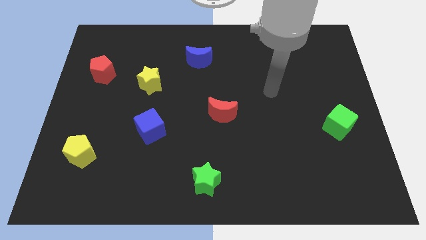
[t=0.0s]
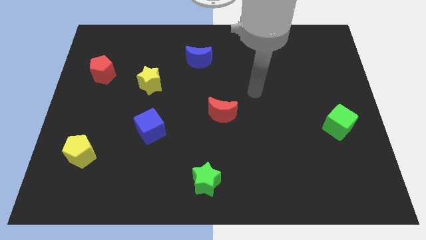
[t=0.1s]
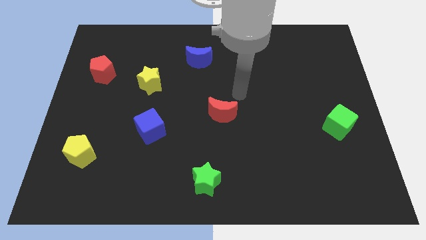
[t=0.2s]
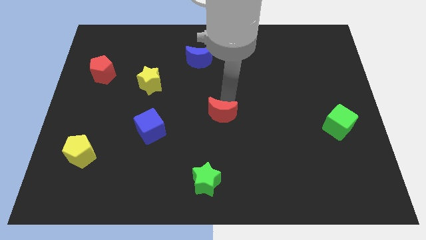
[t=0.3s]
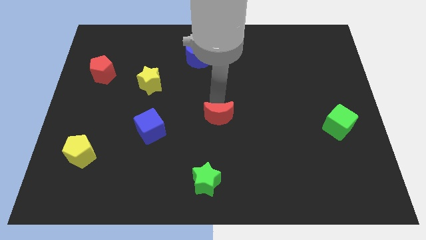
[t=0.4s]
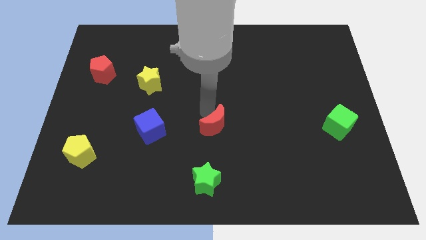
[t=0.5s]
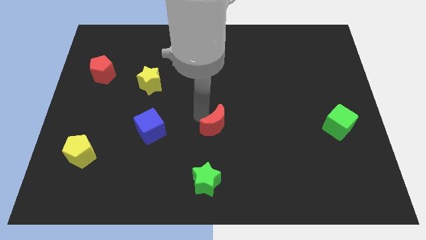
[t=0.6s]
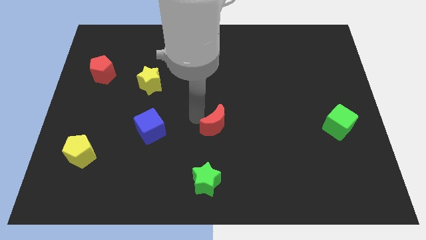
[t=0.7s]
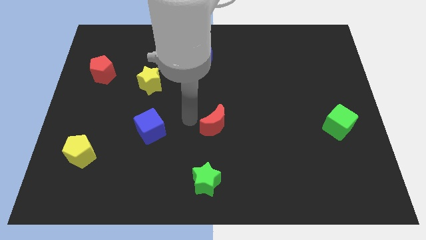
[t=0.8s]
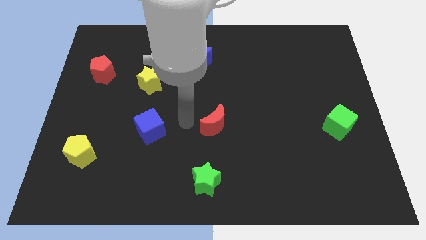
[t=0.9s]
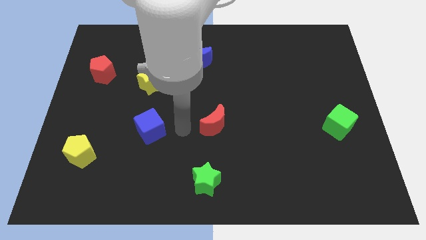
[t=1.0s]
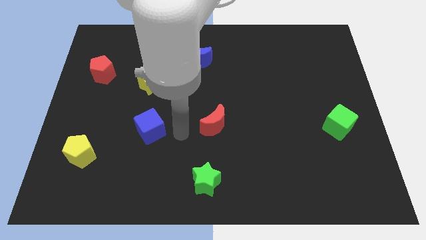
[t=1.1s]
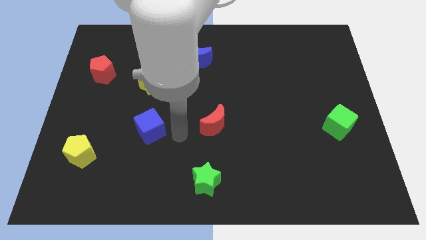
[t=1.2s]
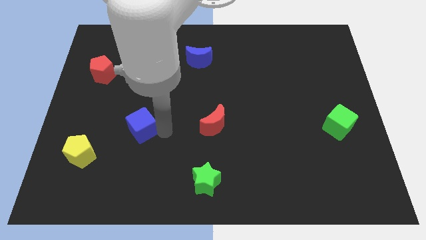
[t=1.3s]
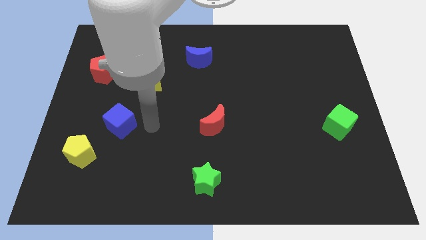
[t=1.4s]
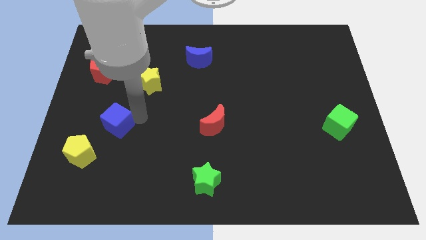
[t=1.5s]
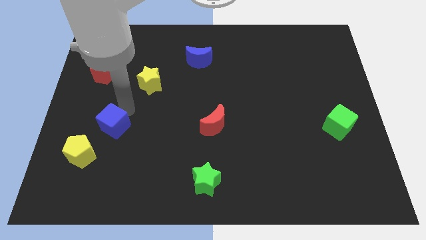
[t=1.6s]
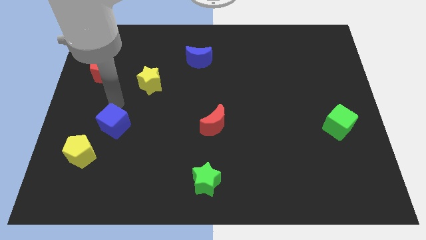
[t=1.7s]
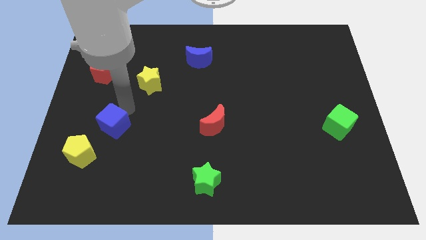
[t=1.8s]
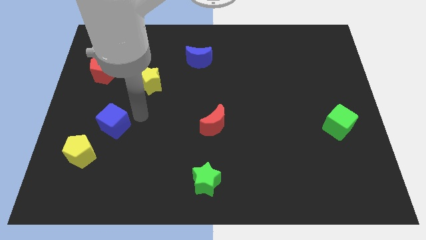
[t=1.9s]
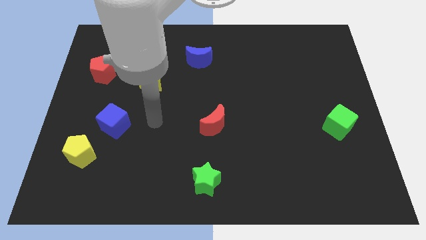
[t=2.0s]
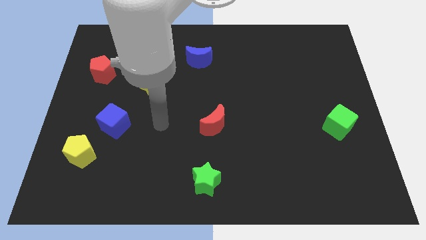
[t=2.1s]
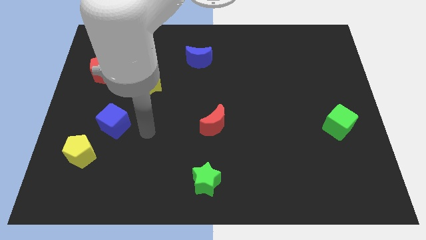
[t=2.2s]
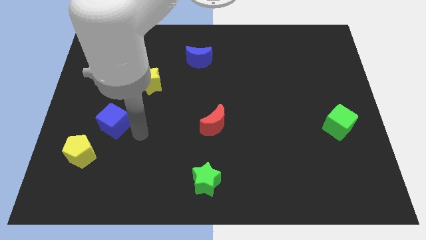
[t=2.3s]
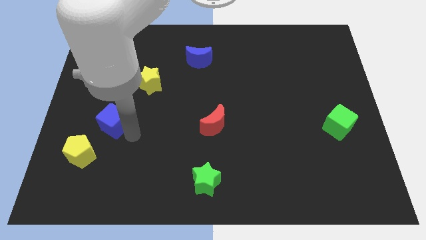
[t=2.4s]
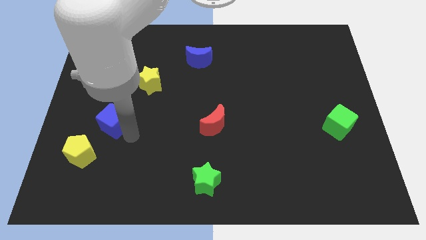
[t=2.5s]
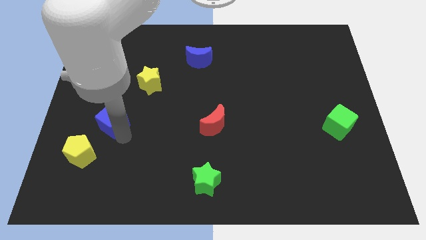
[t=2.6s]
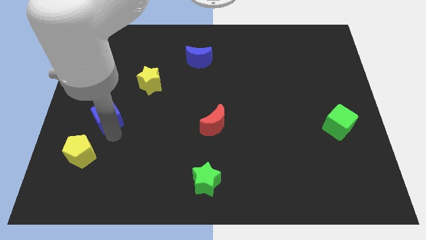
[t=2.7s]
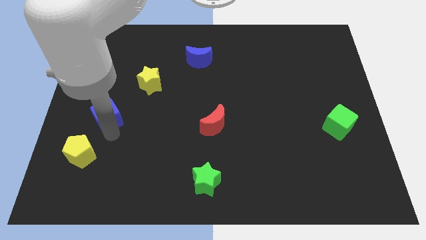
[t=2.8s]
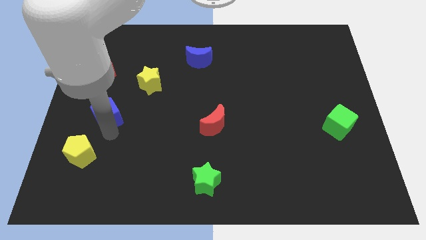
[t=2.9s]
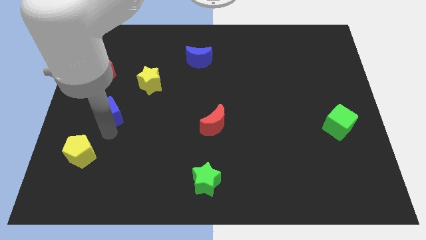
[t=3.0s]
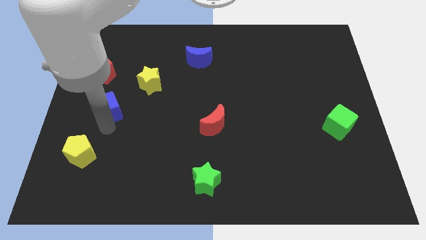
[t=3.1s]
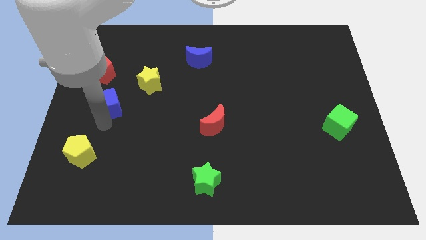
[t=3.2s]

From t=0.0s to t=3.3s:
place the blue cube at the top of the yellow pentagona

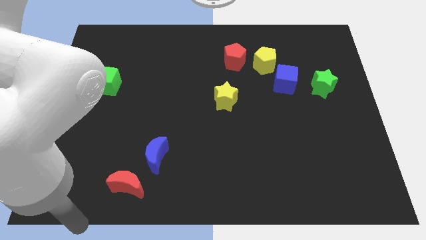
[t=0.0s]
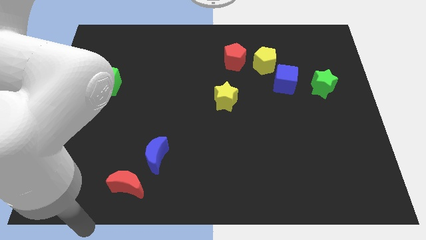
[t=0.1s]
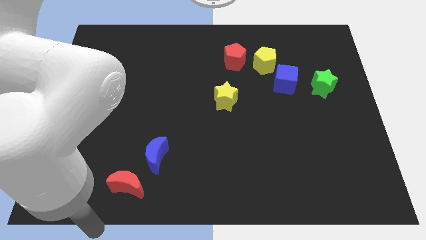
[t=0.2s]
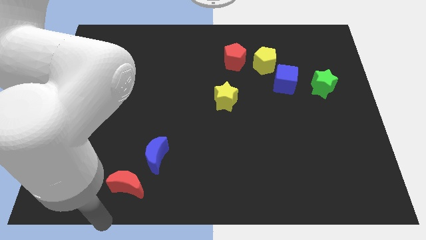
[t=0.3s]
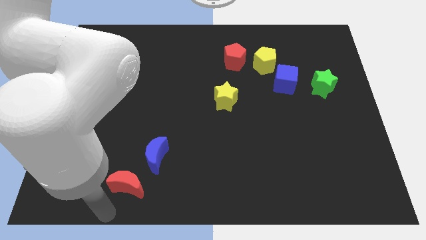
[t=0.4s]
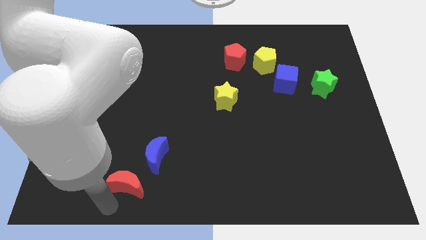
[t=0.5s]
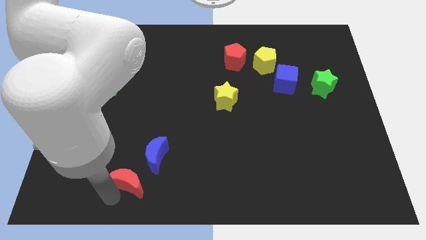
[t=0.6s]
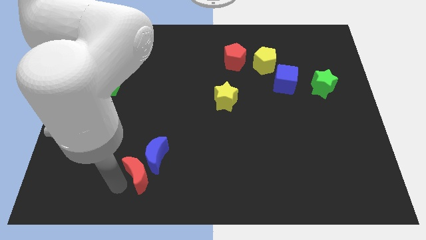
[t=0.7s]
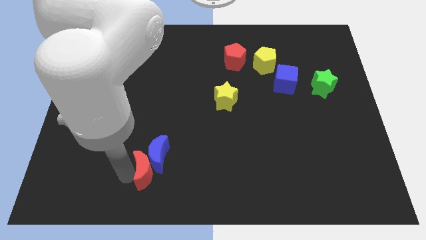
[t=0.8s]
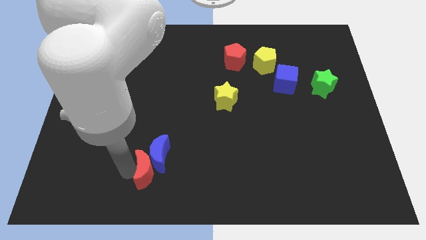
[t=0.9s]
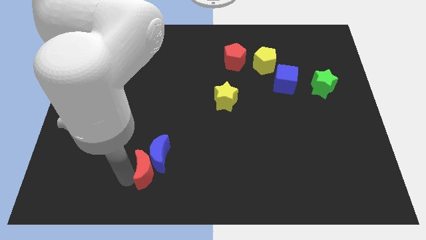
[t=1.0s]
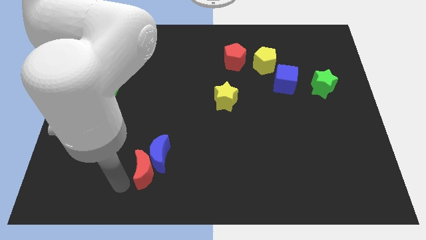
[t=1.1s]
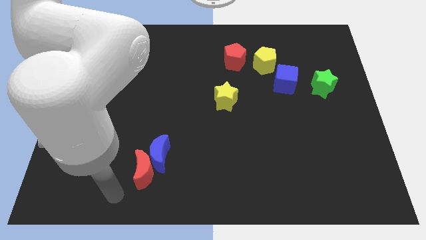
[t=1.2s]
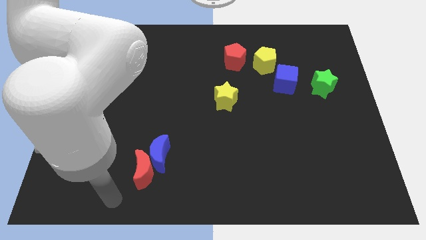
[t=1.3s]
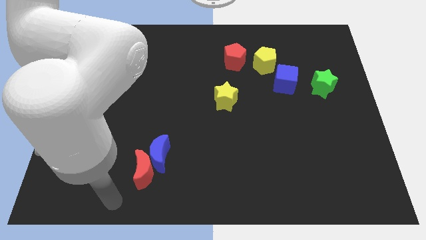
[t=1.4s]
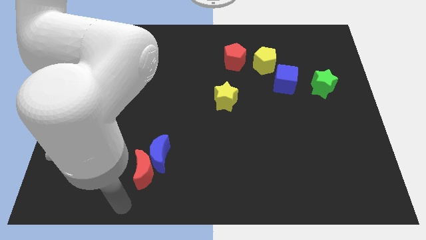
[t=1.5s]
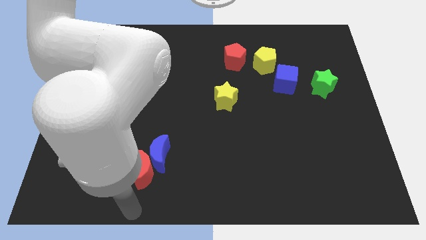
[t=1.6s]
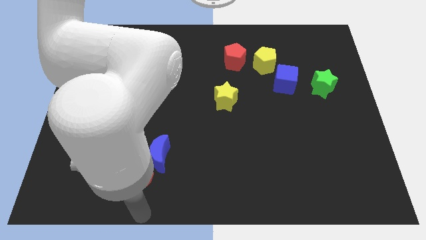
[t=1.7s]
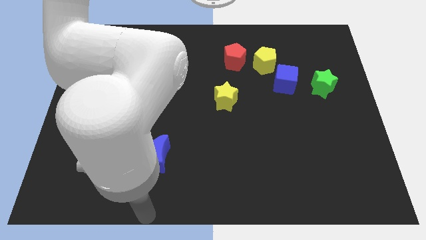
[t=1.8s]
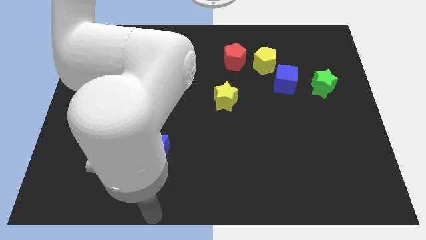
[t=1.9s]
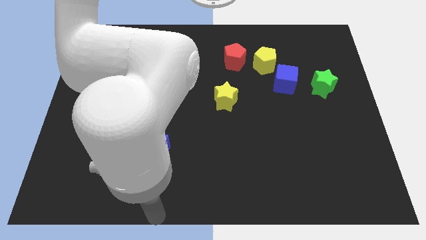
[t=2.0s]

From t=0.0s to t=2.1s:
move the red crescent to the left of the blue crescent

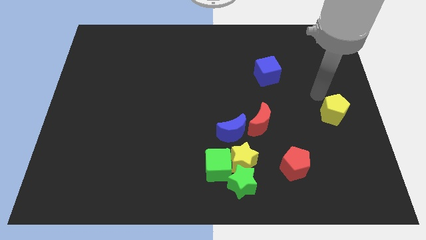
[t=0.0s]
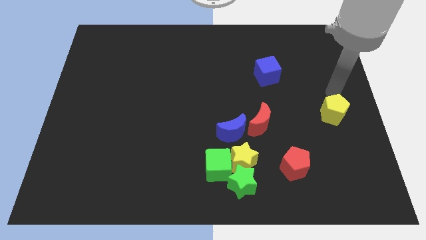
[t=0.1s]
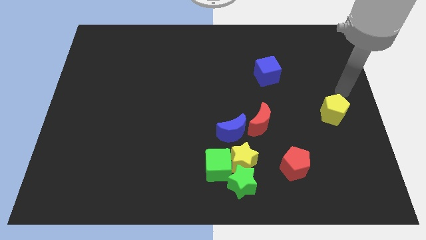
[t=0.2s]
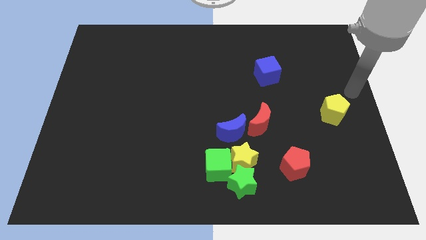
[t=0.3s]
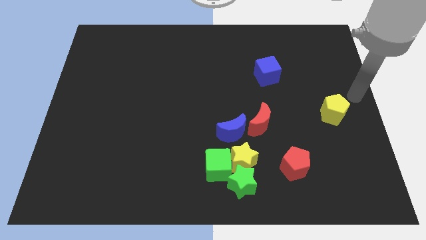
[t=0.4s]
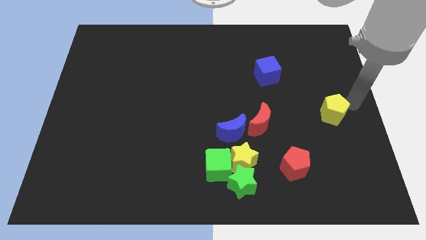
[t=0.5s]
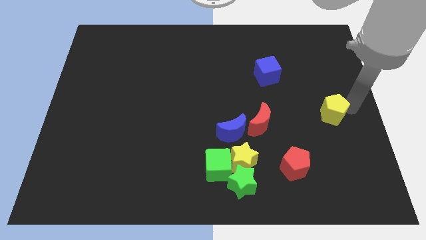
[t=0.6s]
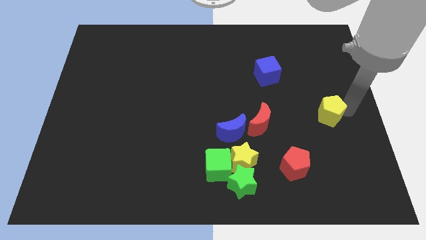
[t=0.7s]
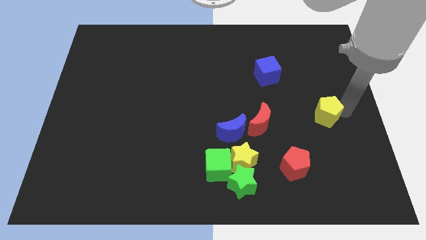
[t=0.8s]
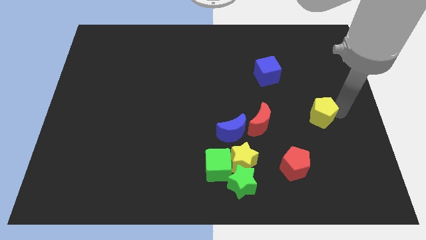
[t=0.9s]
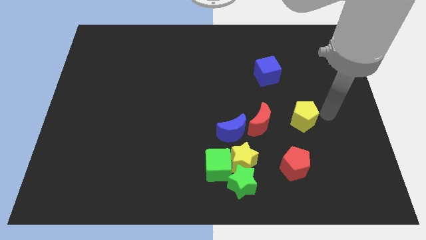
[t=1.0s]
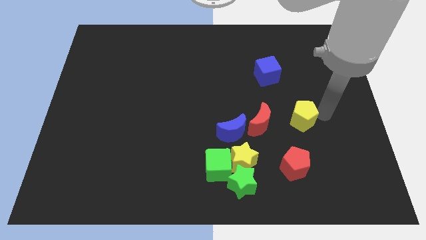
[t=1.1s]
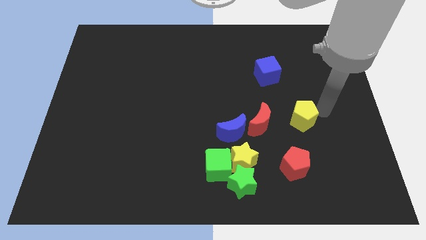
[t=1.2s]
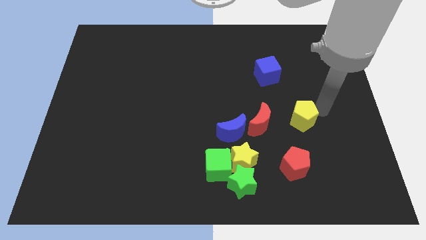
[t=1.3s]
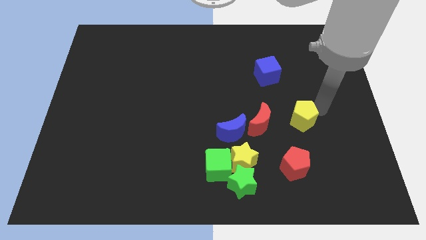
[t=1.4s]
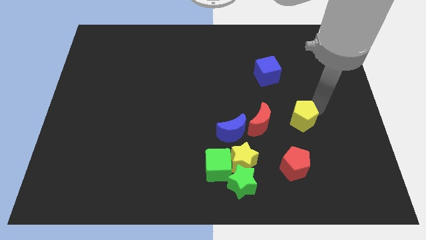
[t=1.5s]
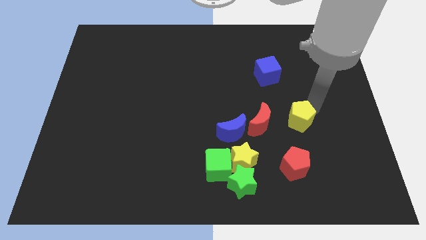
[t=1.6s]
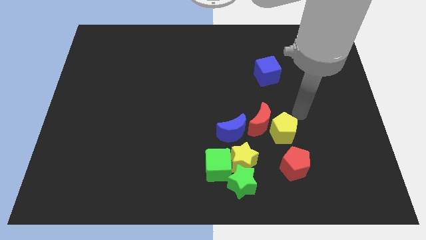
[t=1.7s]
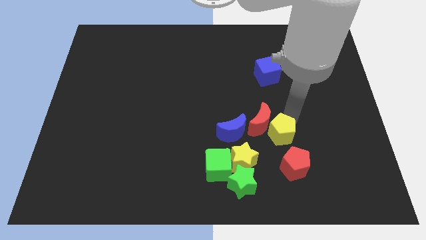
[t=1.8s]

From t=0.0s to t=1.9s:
place the yellow pentagon close to red crescent

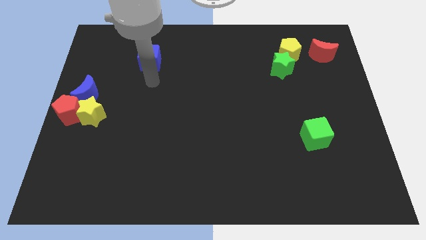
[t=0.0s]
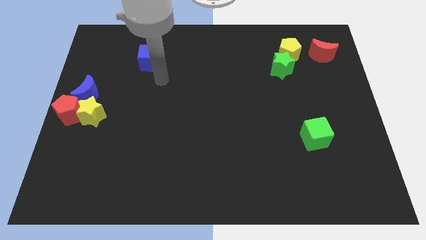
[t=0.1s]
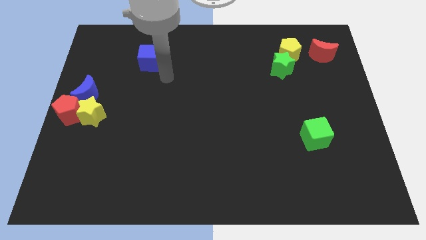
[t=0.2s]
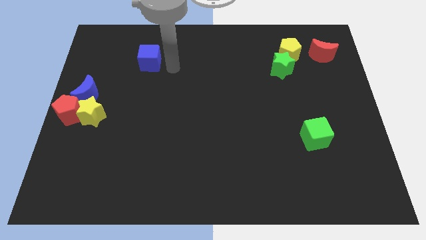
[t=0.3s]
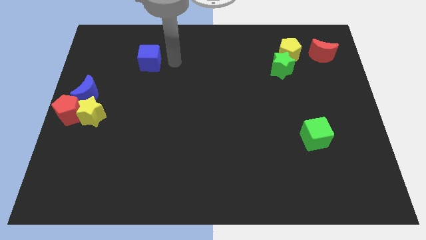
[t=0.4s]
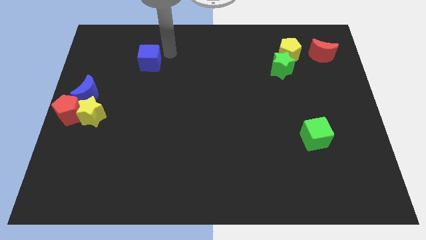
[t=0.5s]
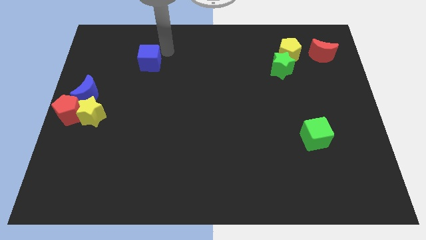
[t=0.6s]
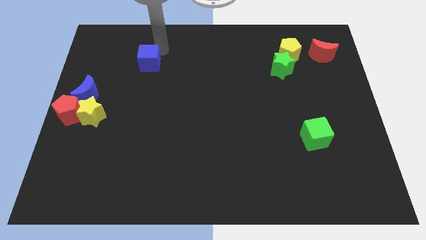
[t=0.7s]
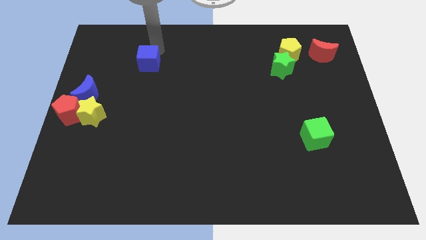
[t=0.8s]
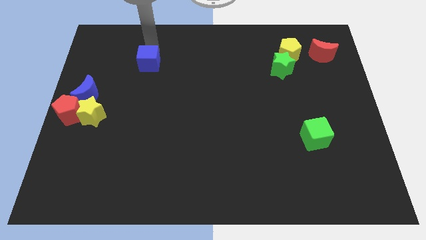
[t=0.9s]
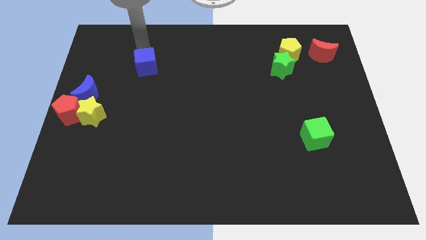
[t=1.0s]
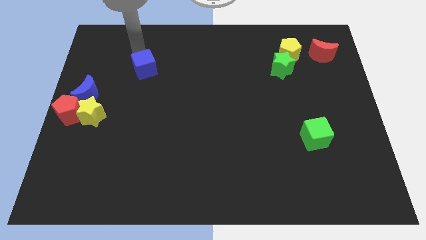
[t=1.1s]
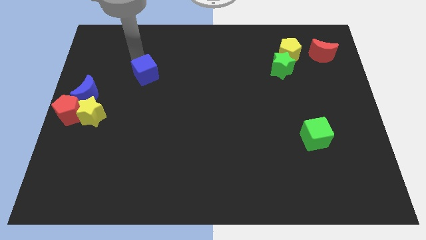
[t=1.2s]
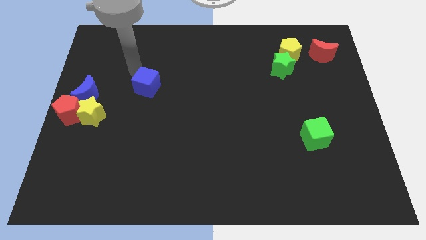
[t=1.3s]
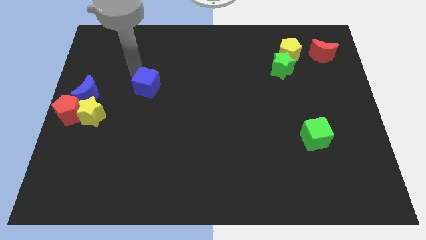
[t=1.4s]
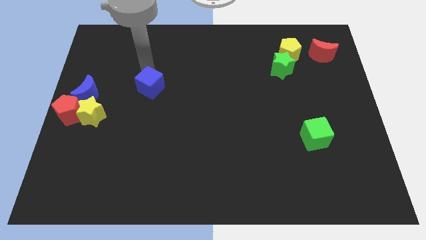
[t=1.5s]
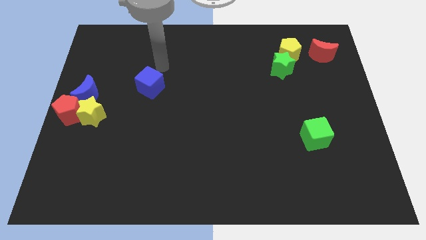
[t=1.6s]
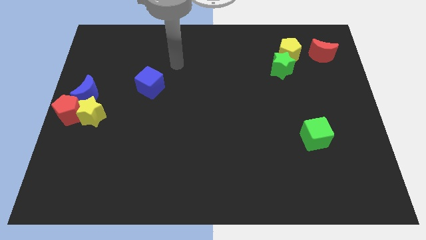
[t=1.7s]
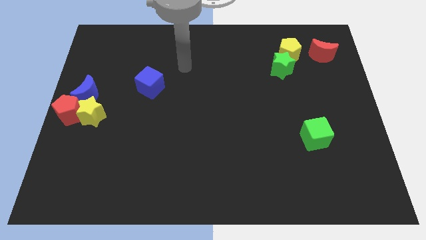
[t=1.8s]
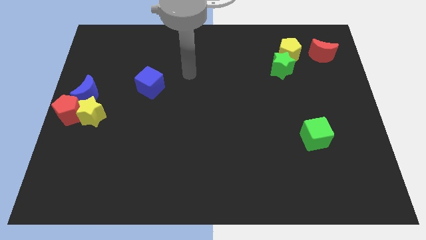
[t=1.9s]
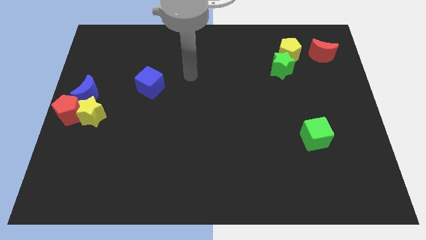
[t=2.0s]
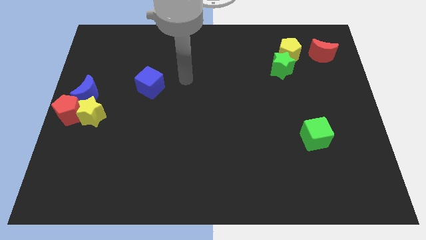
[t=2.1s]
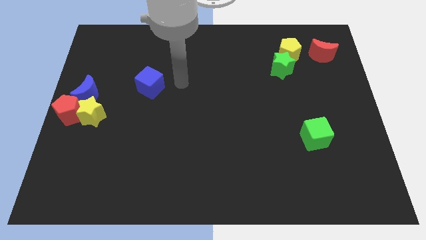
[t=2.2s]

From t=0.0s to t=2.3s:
push blue cube slightly down
